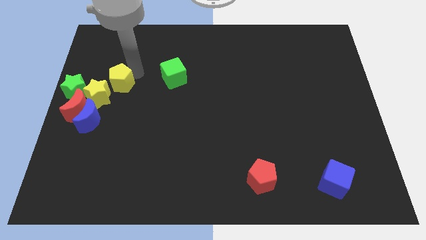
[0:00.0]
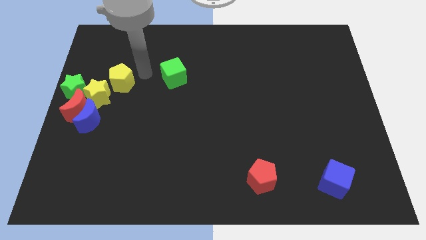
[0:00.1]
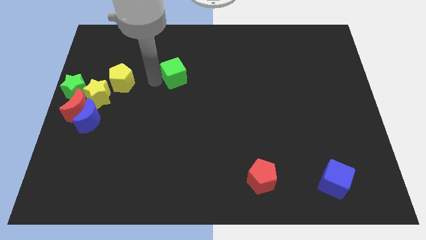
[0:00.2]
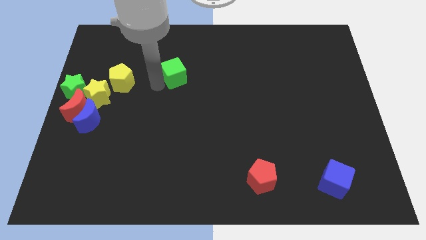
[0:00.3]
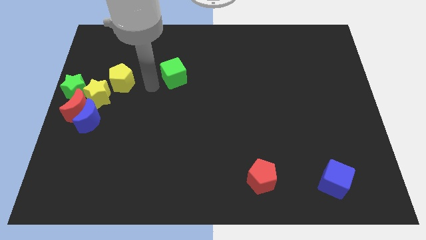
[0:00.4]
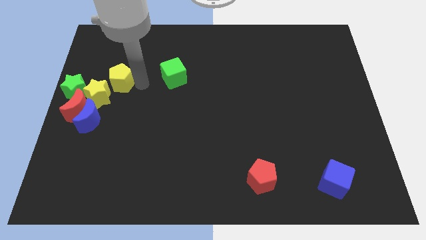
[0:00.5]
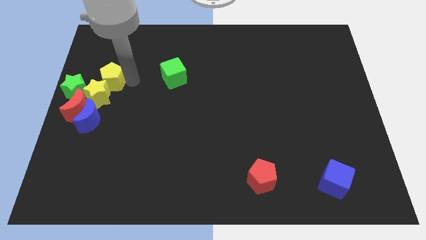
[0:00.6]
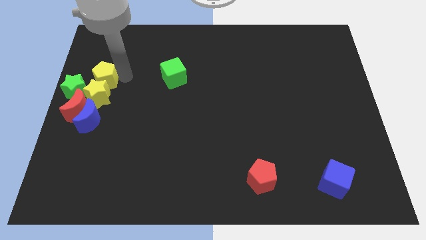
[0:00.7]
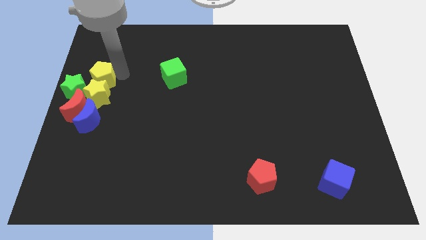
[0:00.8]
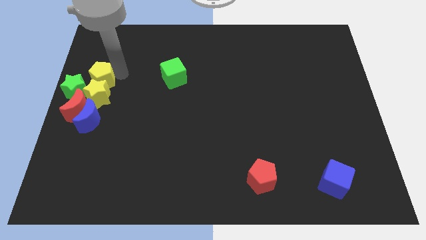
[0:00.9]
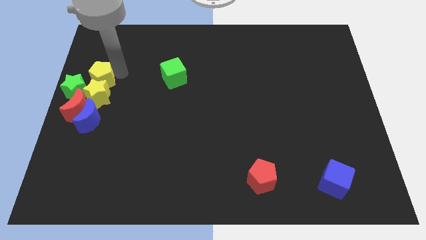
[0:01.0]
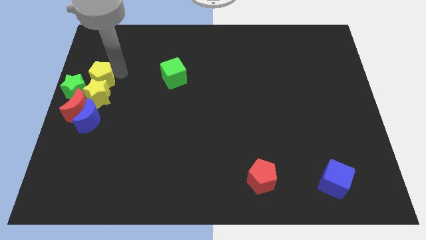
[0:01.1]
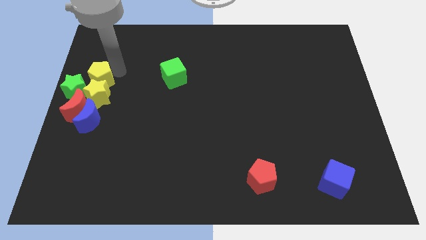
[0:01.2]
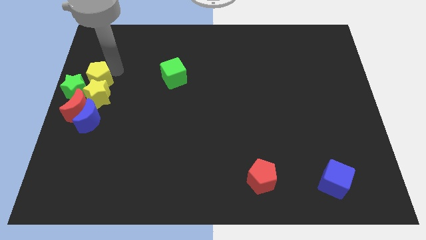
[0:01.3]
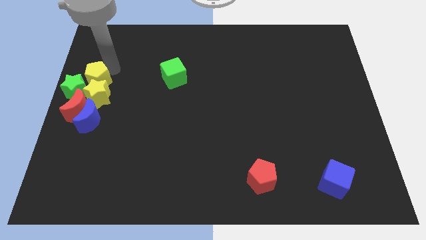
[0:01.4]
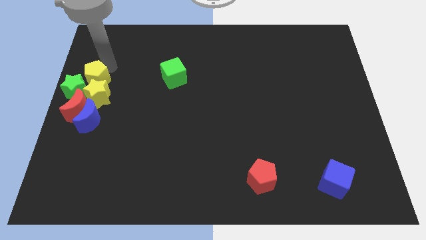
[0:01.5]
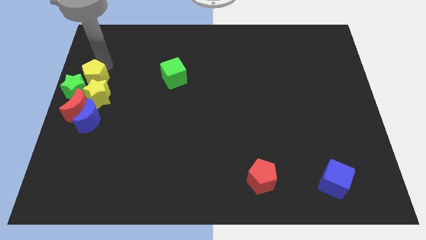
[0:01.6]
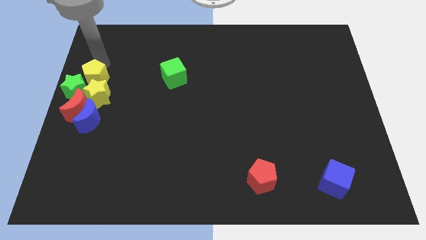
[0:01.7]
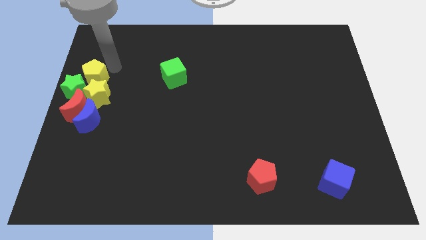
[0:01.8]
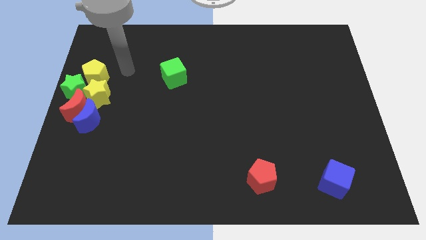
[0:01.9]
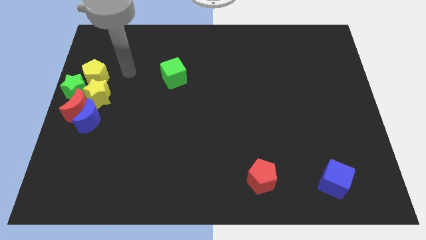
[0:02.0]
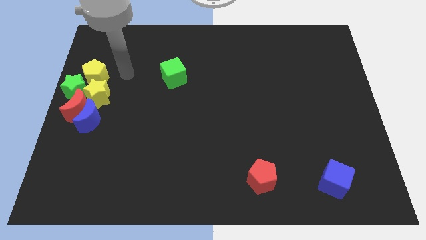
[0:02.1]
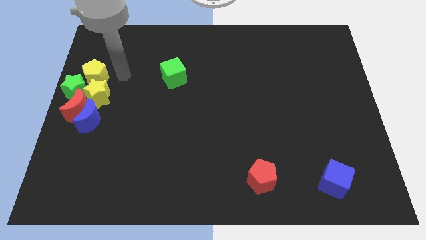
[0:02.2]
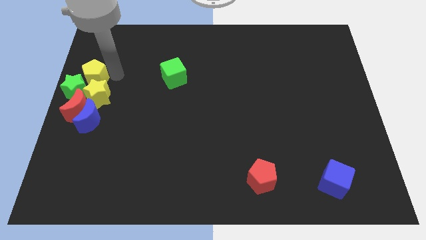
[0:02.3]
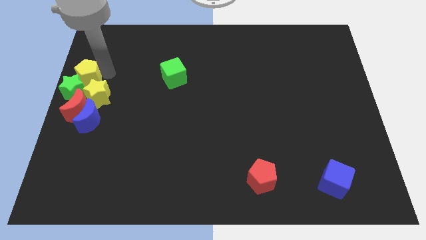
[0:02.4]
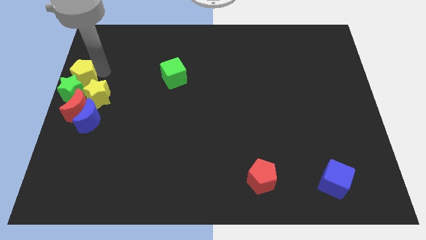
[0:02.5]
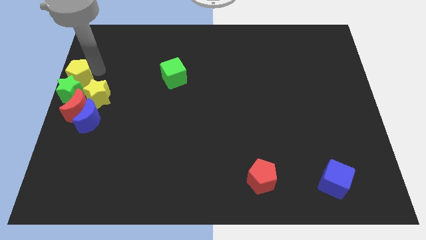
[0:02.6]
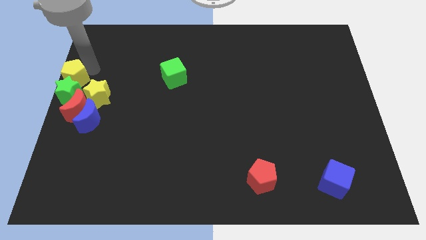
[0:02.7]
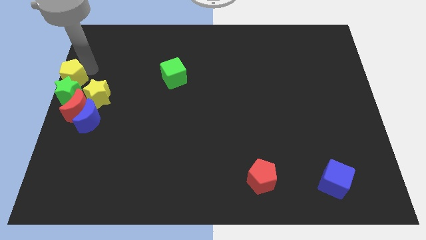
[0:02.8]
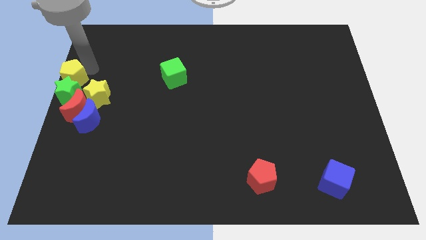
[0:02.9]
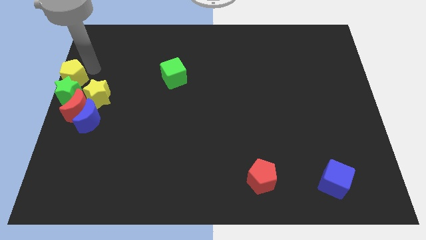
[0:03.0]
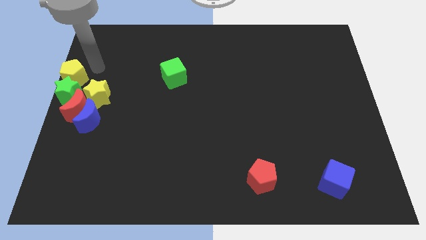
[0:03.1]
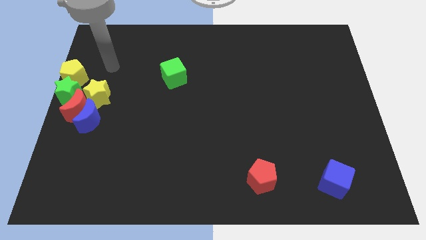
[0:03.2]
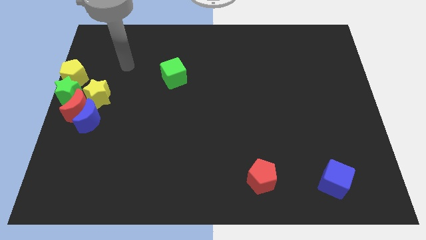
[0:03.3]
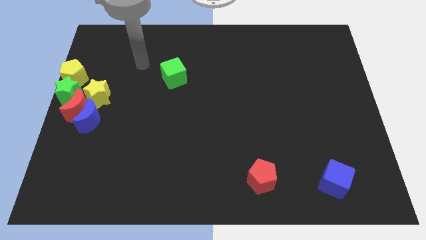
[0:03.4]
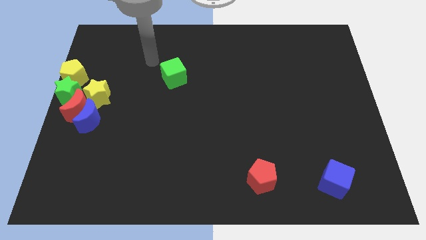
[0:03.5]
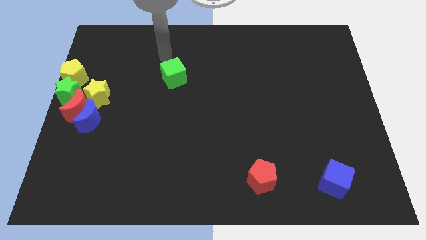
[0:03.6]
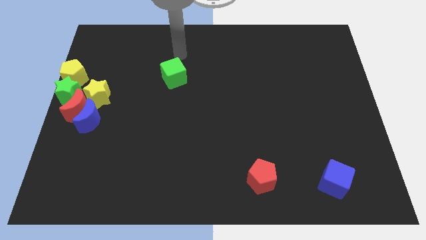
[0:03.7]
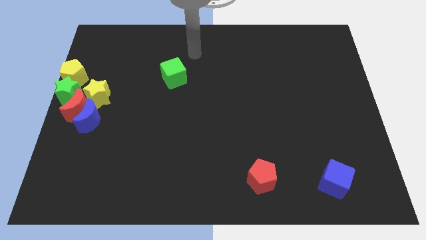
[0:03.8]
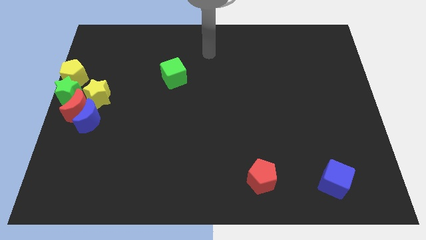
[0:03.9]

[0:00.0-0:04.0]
place yellow pentagon on the top of green star

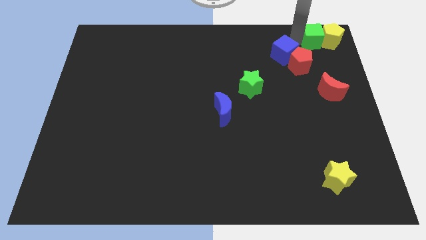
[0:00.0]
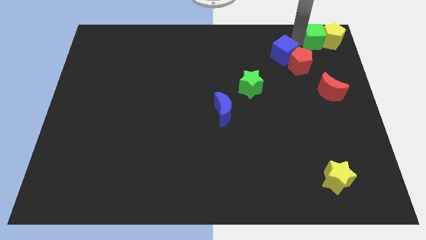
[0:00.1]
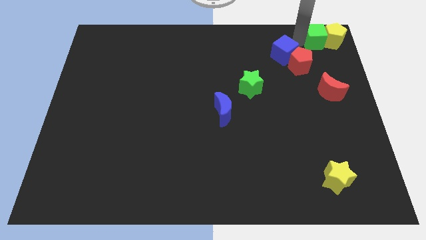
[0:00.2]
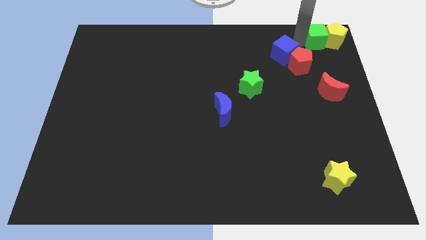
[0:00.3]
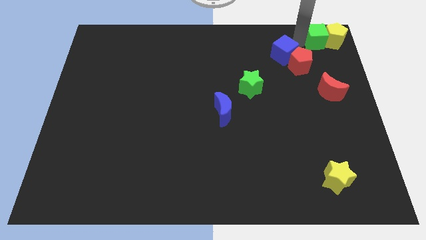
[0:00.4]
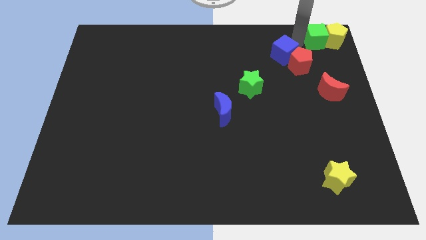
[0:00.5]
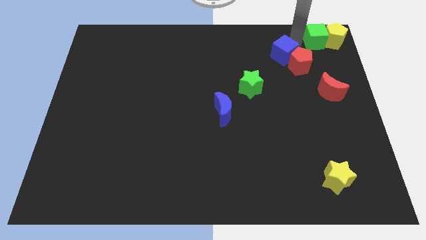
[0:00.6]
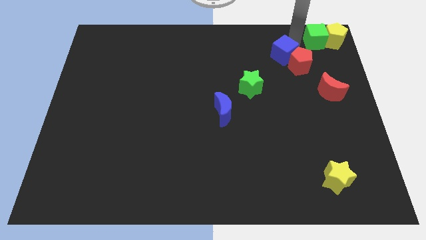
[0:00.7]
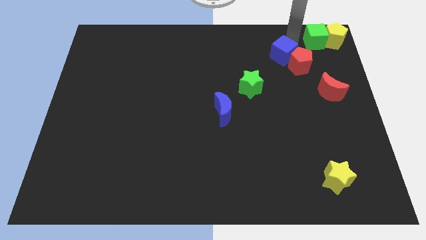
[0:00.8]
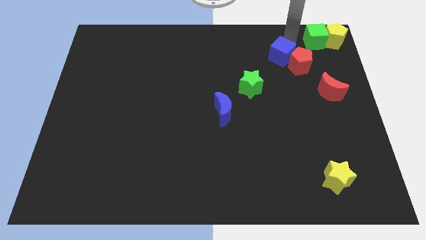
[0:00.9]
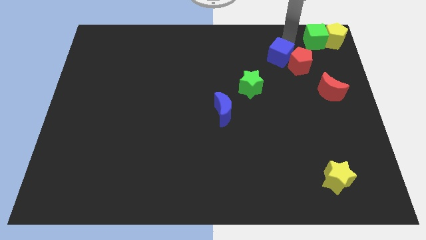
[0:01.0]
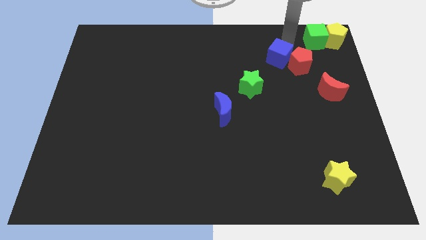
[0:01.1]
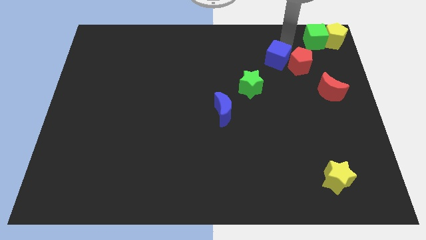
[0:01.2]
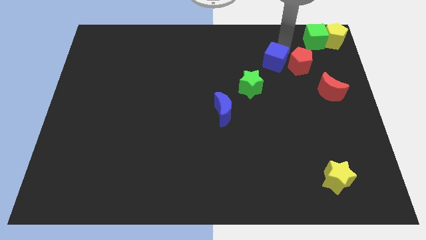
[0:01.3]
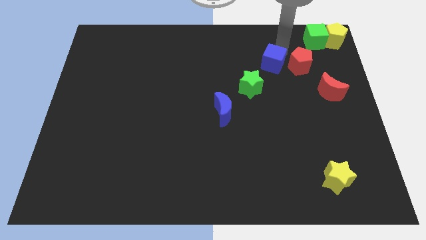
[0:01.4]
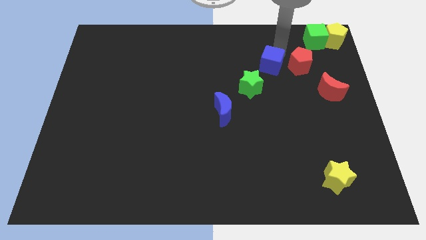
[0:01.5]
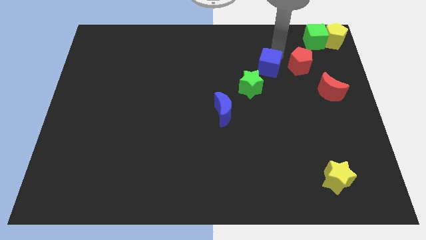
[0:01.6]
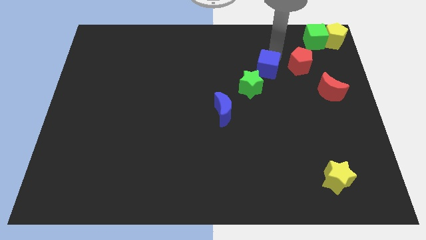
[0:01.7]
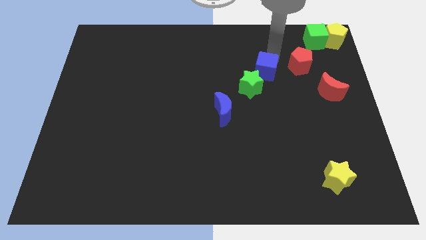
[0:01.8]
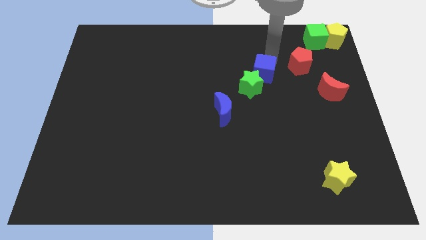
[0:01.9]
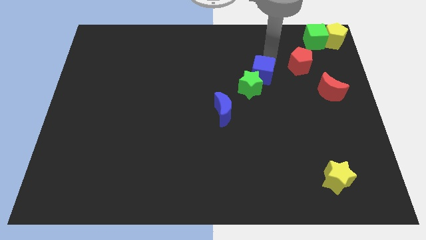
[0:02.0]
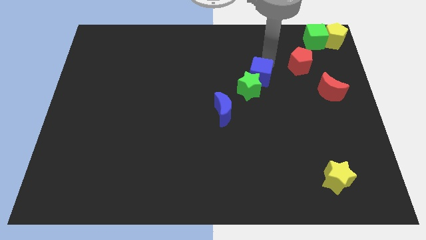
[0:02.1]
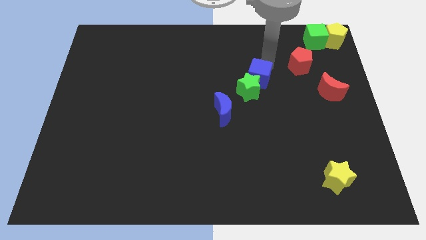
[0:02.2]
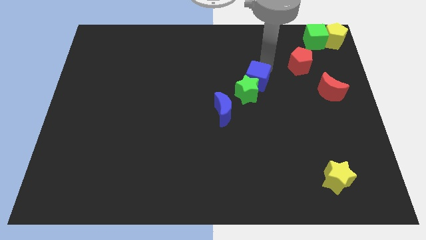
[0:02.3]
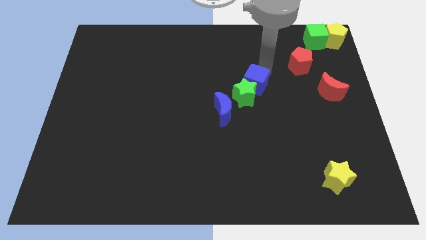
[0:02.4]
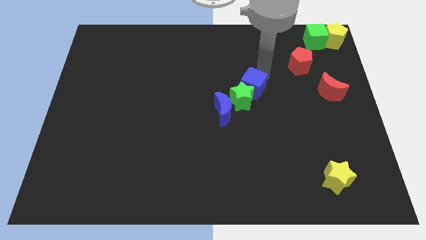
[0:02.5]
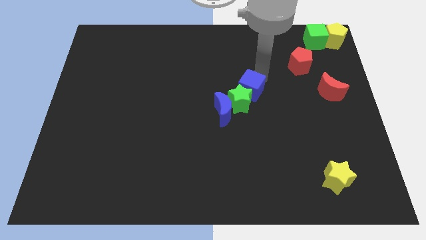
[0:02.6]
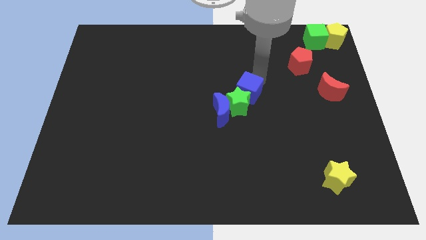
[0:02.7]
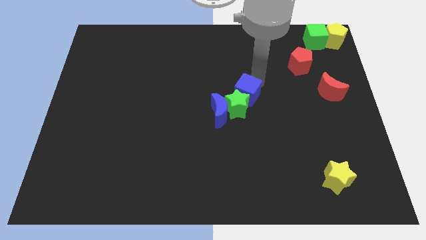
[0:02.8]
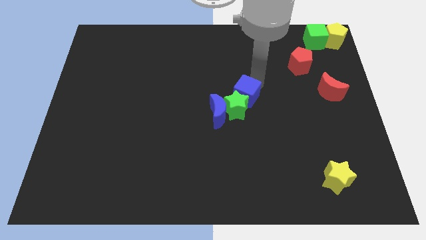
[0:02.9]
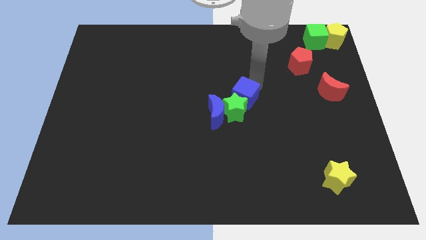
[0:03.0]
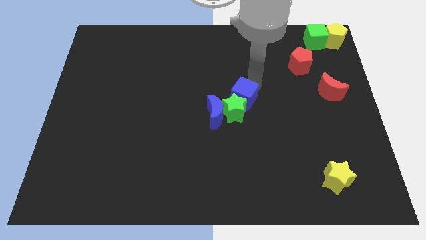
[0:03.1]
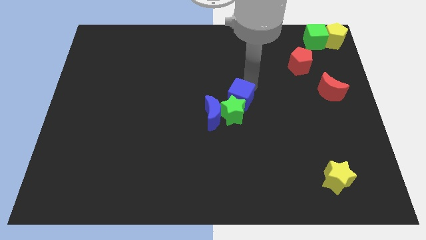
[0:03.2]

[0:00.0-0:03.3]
group up the blue cube the green star and the blue moon at the center of the board

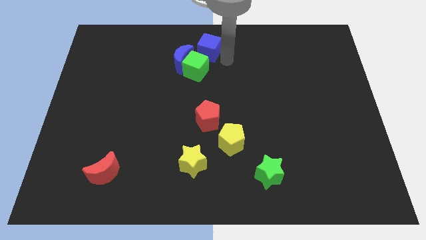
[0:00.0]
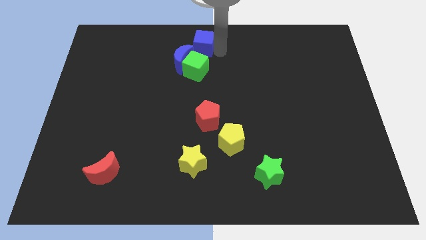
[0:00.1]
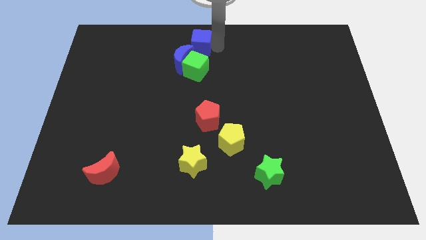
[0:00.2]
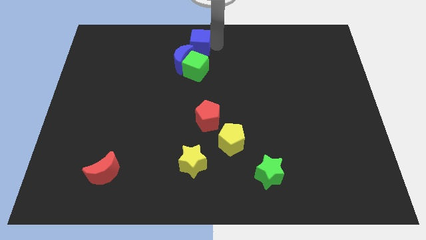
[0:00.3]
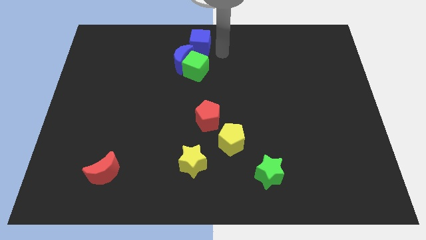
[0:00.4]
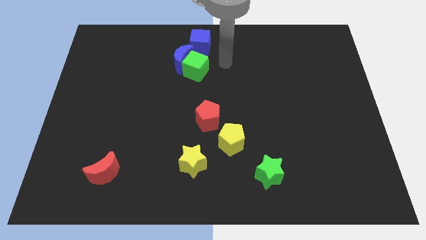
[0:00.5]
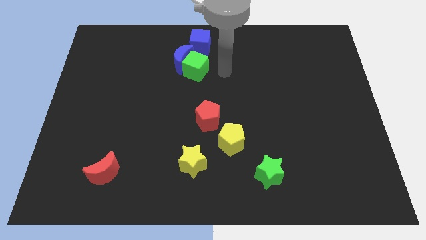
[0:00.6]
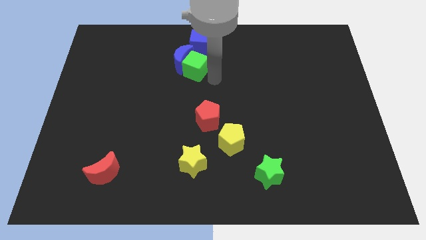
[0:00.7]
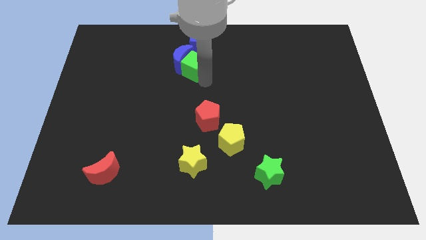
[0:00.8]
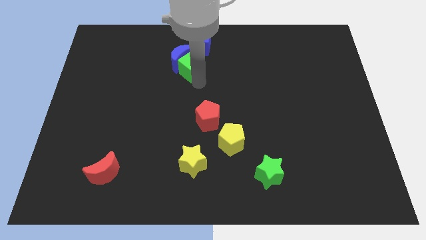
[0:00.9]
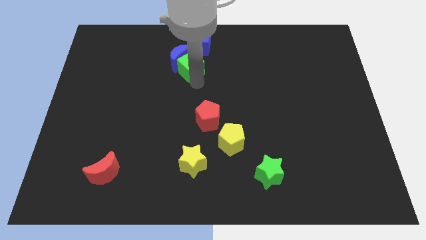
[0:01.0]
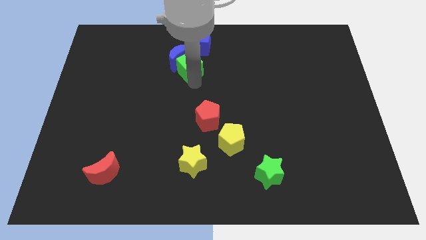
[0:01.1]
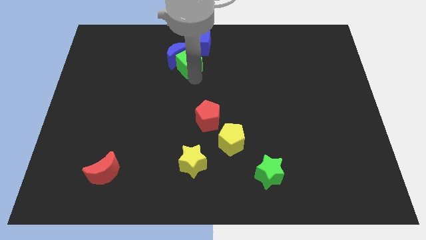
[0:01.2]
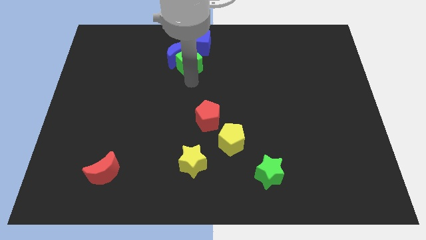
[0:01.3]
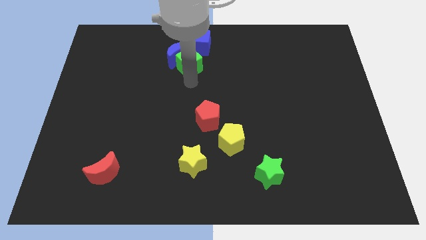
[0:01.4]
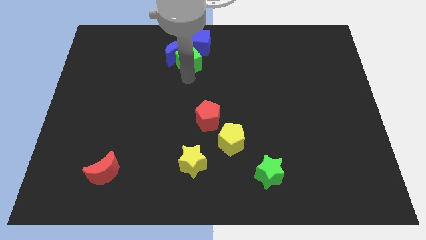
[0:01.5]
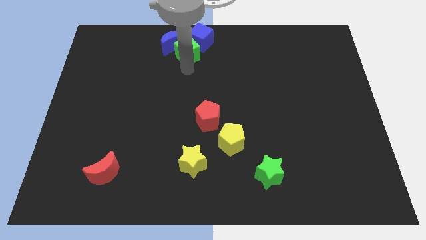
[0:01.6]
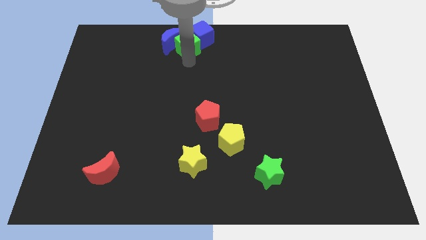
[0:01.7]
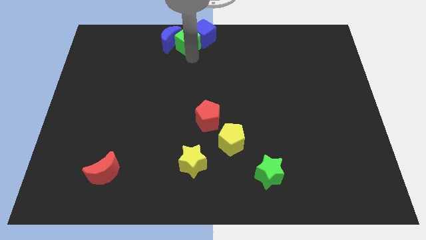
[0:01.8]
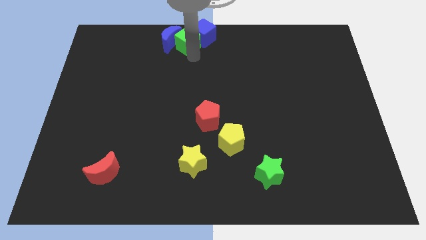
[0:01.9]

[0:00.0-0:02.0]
push the group of blocks at the top center of the board
